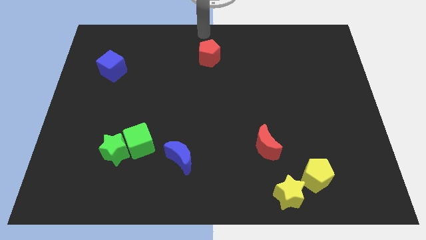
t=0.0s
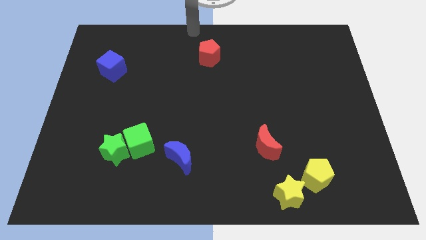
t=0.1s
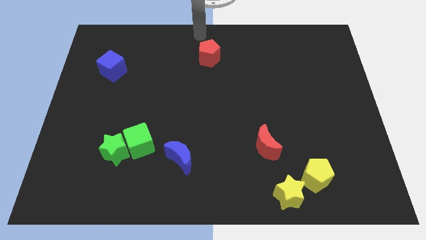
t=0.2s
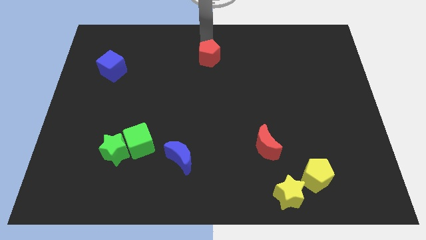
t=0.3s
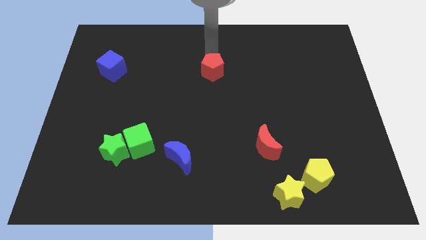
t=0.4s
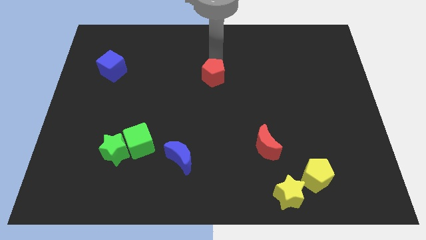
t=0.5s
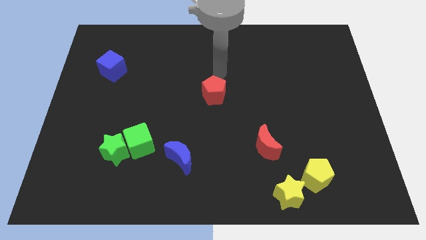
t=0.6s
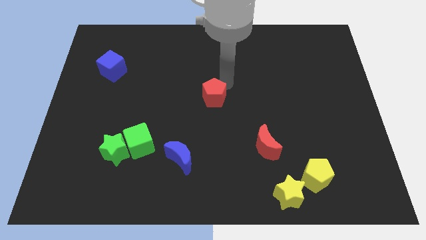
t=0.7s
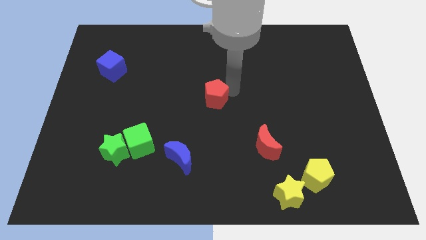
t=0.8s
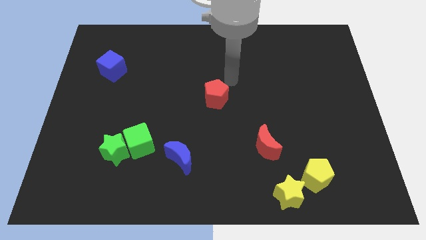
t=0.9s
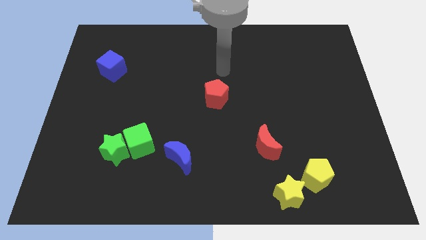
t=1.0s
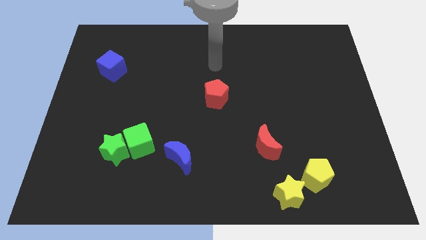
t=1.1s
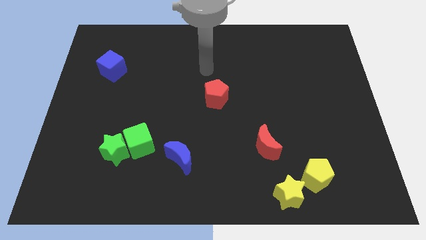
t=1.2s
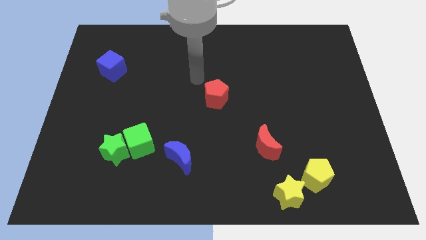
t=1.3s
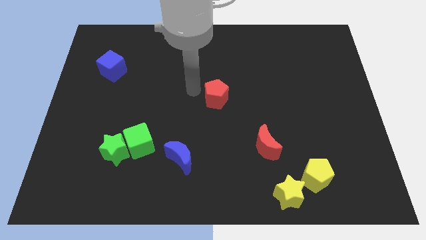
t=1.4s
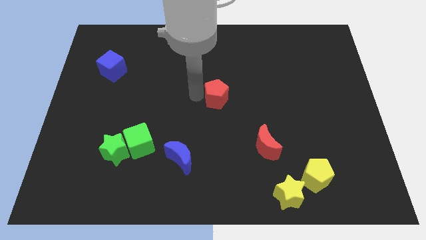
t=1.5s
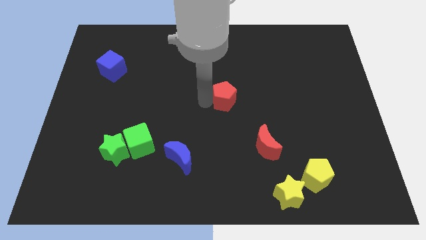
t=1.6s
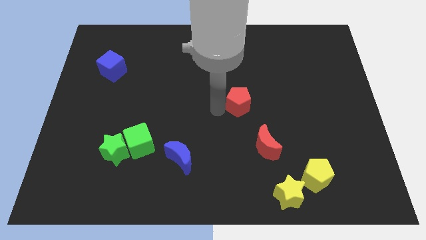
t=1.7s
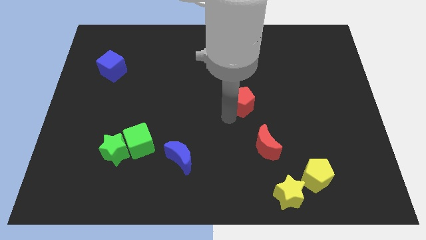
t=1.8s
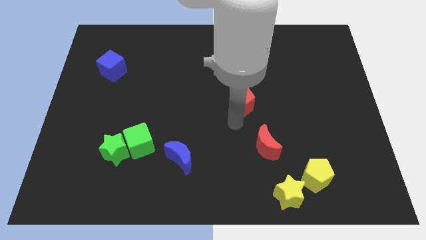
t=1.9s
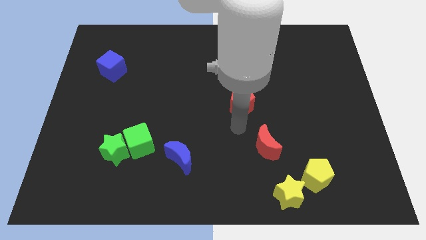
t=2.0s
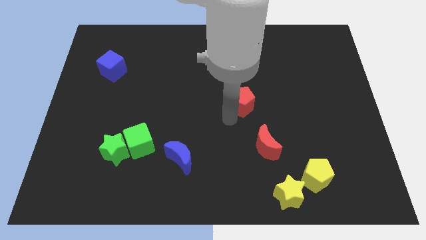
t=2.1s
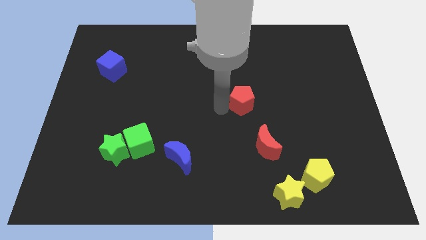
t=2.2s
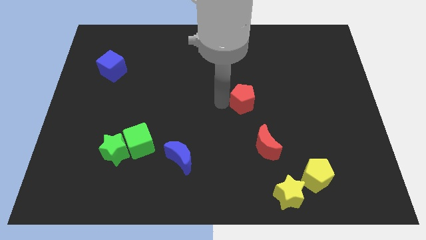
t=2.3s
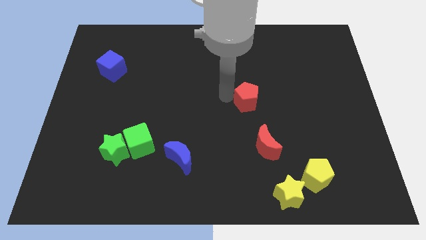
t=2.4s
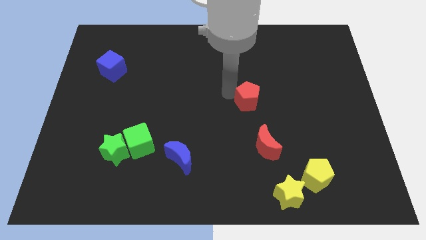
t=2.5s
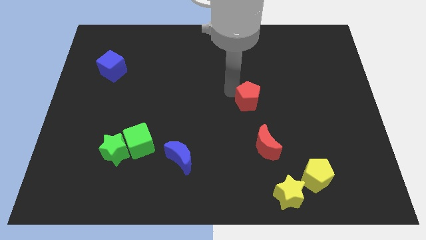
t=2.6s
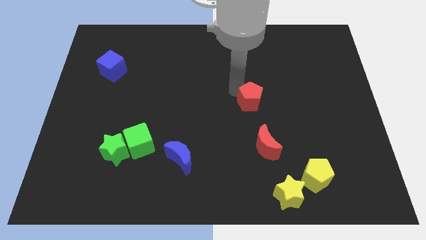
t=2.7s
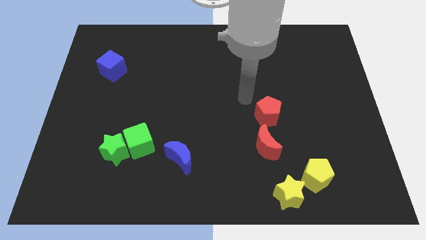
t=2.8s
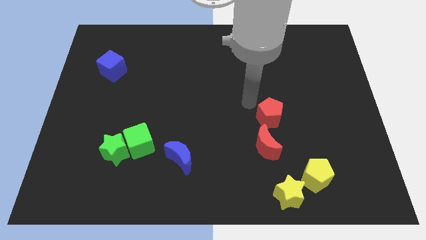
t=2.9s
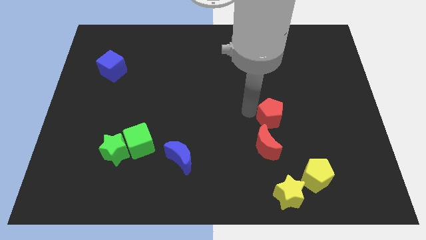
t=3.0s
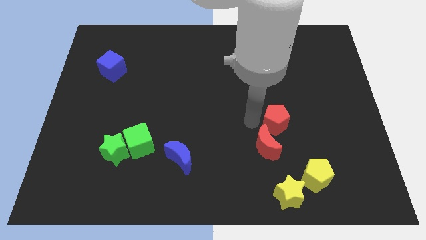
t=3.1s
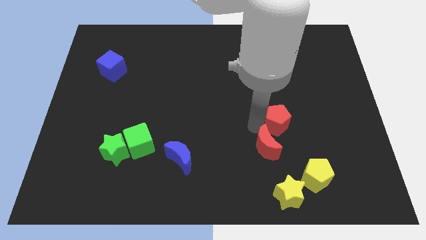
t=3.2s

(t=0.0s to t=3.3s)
move the red pentagon close to the red crescent

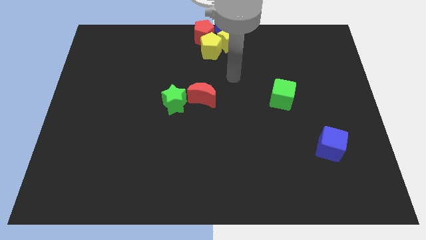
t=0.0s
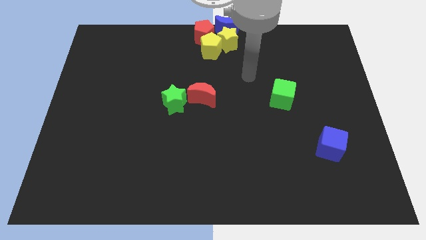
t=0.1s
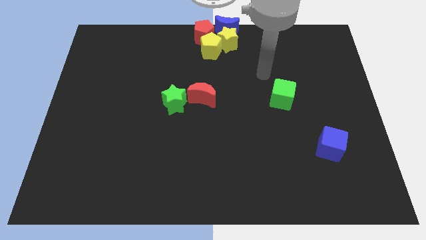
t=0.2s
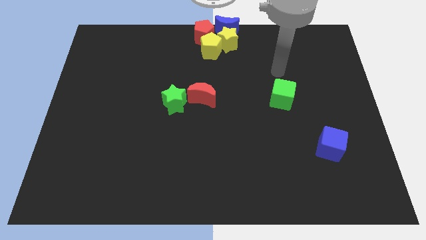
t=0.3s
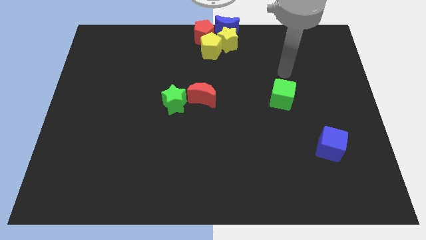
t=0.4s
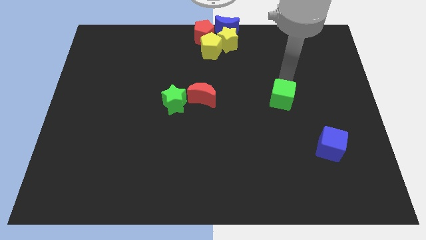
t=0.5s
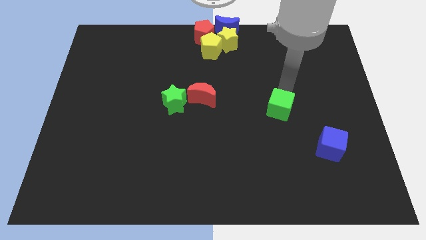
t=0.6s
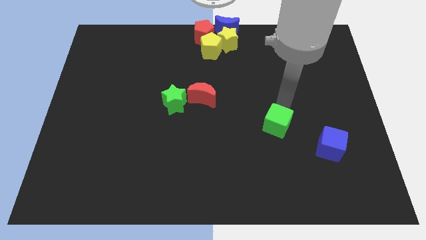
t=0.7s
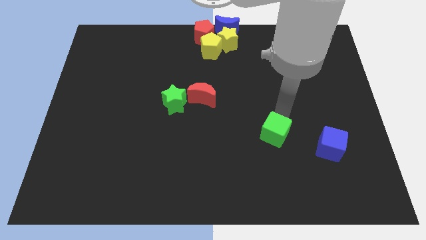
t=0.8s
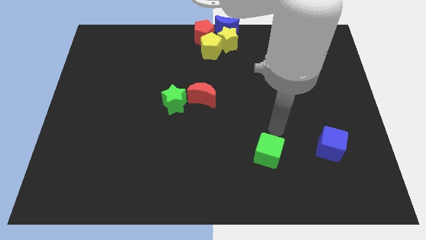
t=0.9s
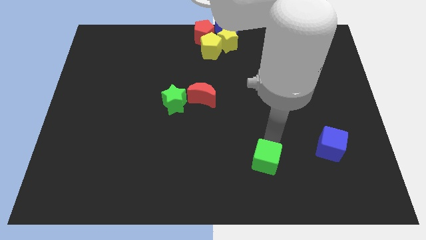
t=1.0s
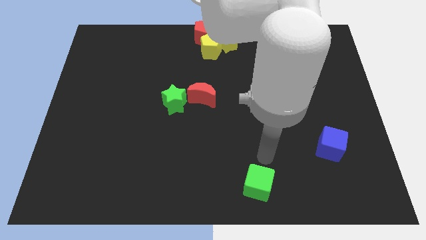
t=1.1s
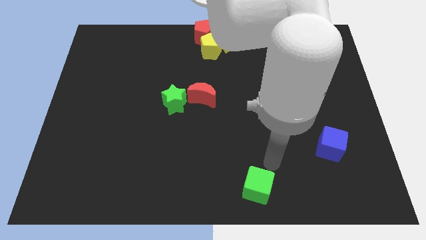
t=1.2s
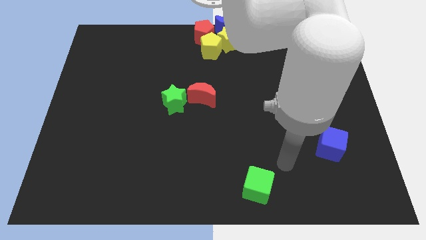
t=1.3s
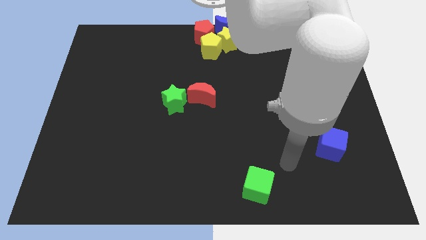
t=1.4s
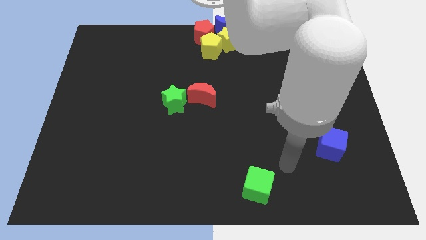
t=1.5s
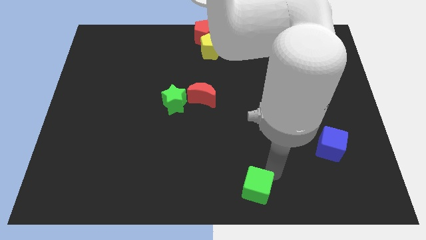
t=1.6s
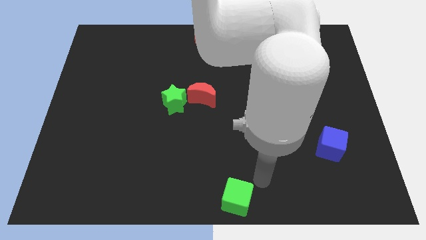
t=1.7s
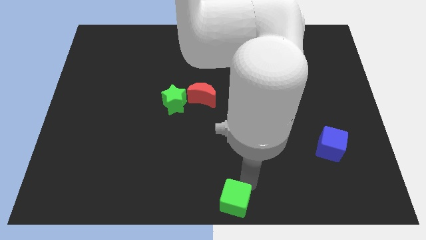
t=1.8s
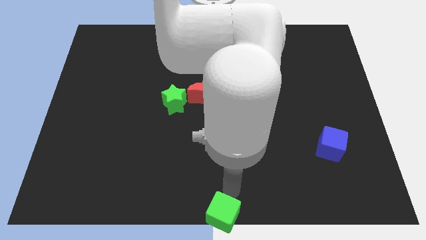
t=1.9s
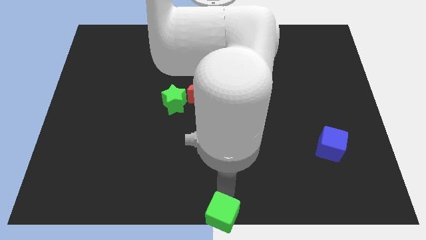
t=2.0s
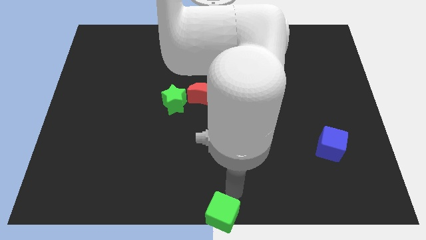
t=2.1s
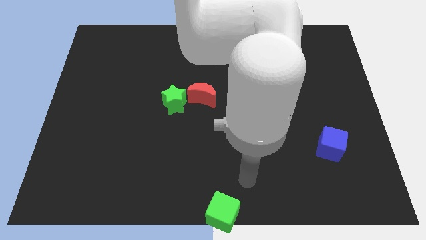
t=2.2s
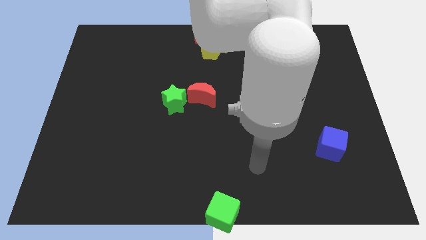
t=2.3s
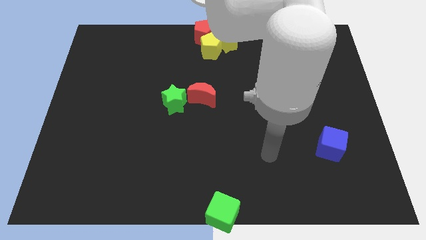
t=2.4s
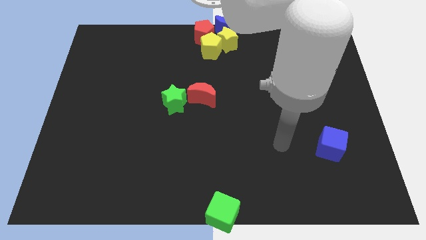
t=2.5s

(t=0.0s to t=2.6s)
move the green square at the bottom center of the board

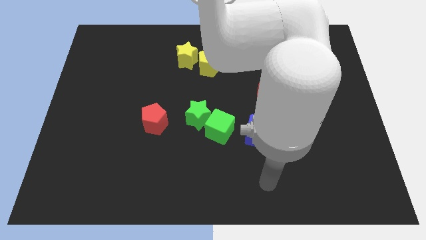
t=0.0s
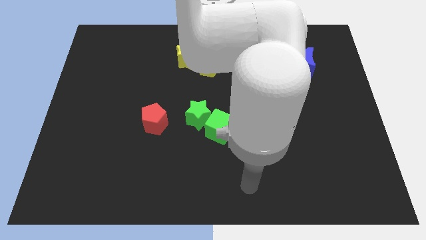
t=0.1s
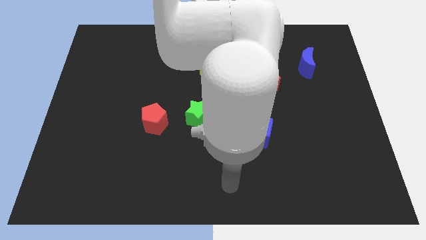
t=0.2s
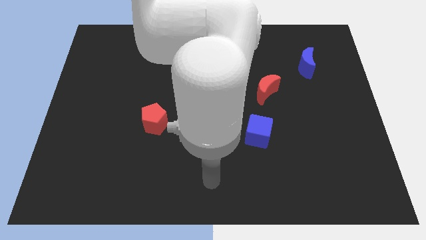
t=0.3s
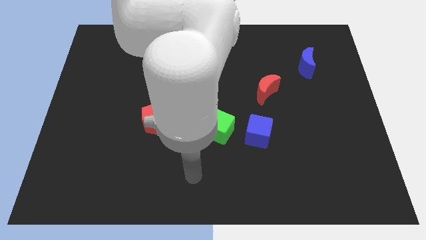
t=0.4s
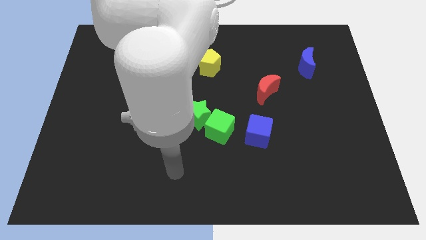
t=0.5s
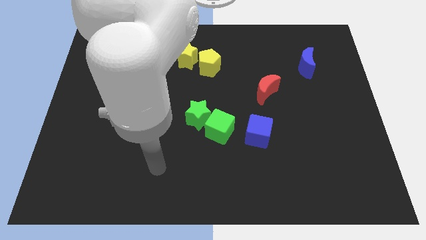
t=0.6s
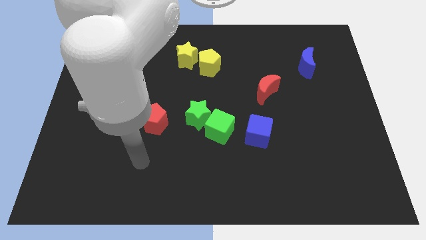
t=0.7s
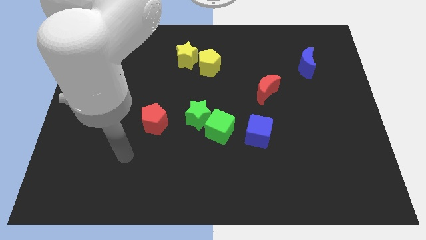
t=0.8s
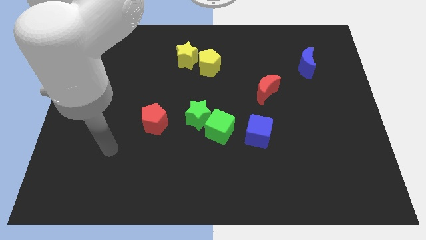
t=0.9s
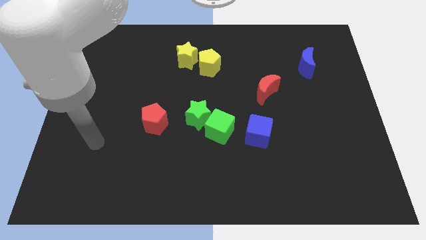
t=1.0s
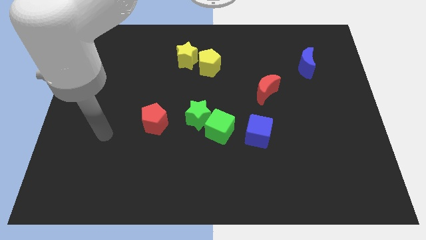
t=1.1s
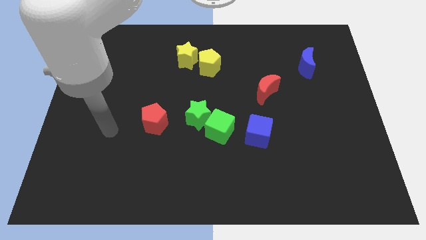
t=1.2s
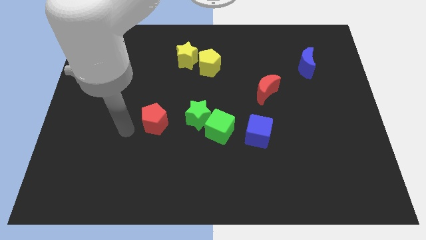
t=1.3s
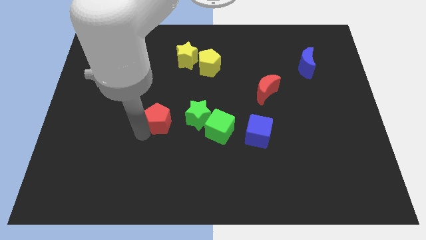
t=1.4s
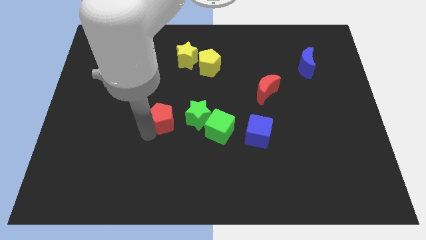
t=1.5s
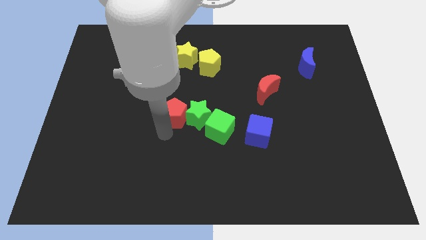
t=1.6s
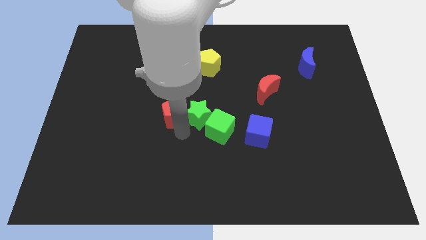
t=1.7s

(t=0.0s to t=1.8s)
push the red pentagon into the green star

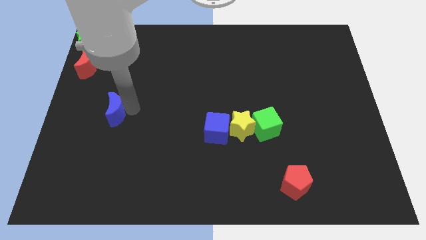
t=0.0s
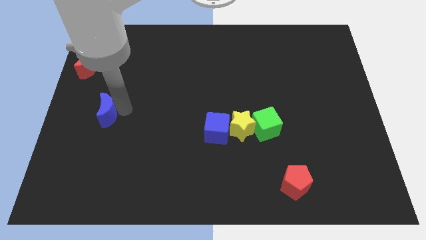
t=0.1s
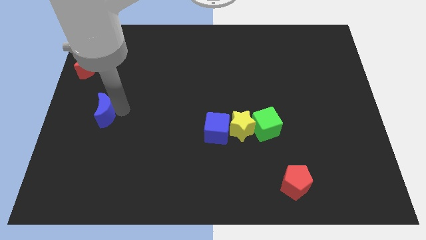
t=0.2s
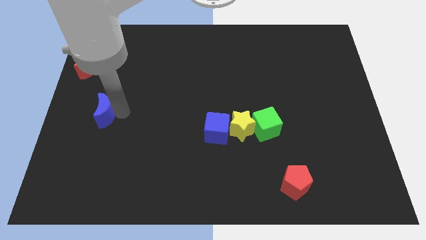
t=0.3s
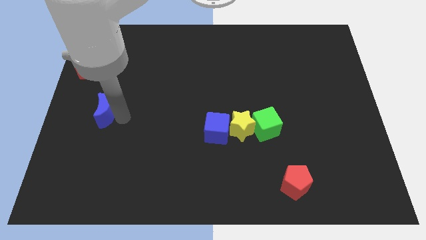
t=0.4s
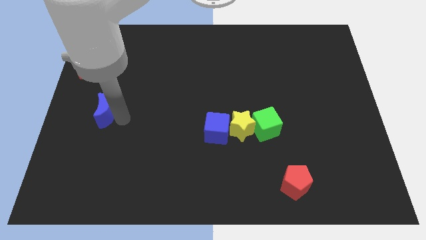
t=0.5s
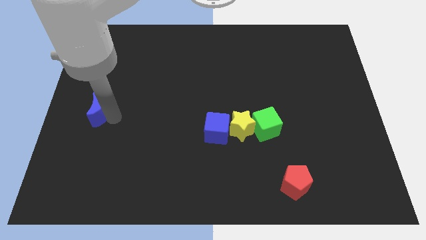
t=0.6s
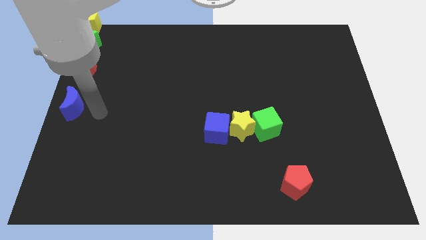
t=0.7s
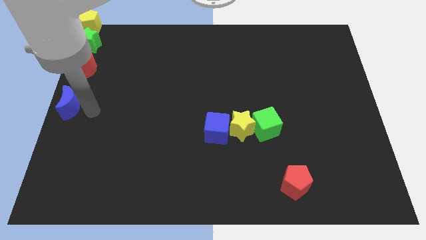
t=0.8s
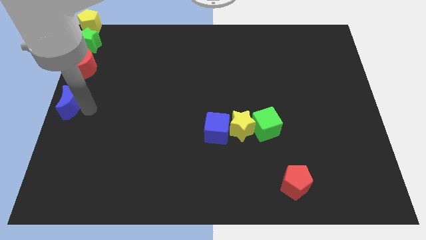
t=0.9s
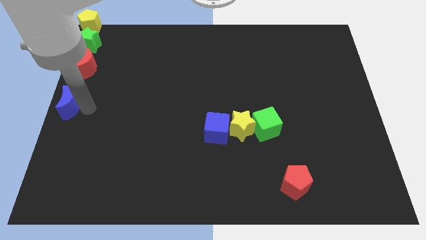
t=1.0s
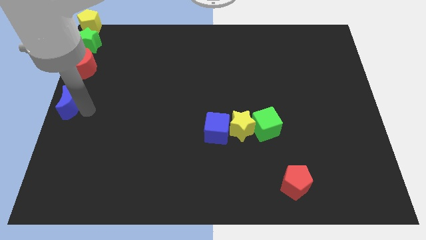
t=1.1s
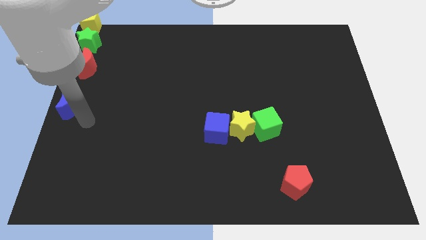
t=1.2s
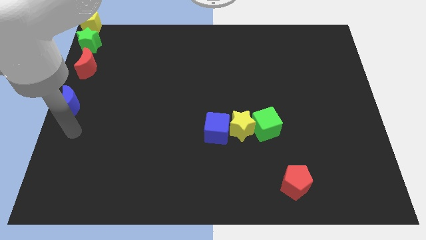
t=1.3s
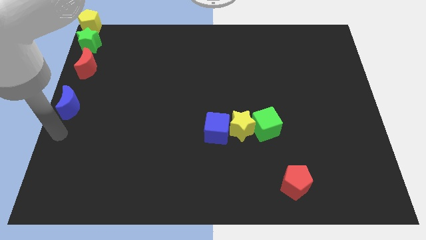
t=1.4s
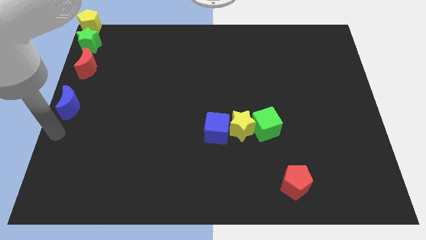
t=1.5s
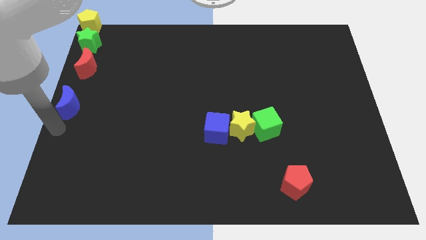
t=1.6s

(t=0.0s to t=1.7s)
place the blue moon vertically below the red moon
